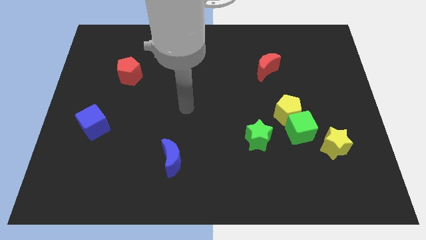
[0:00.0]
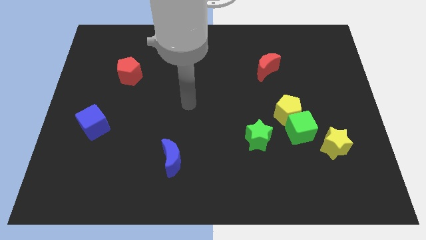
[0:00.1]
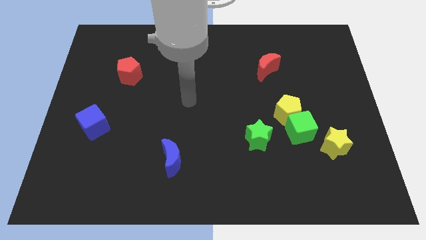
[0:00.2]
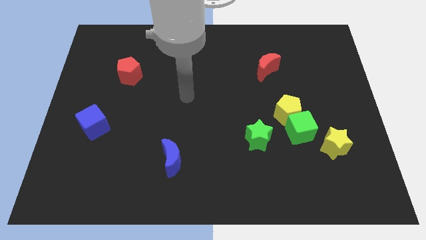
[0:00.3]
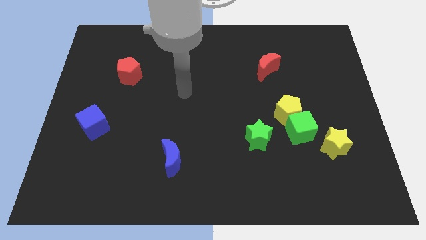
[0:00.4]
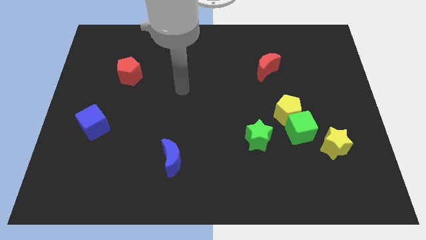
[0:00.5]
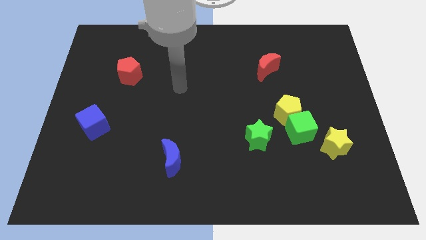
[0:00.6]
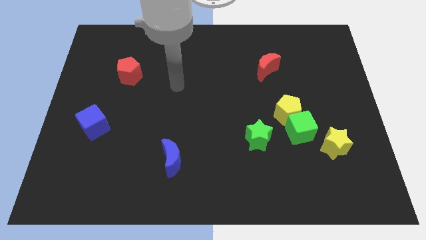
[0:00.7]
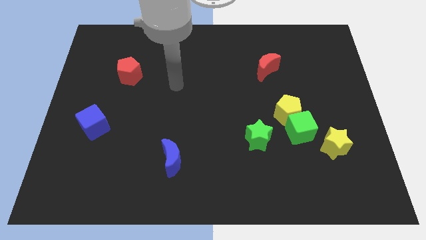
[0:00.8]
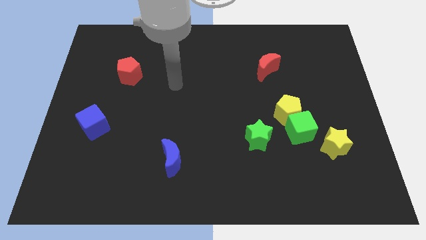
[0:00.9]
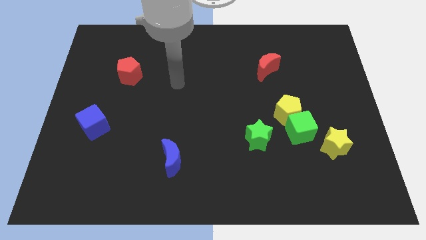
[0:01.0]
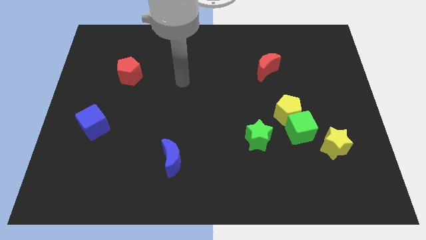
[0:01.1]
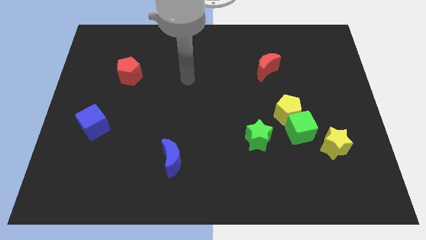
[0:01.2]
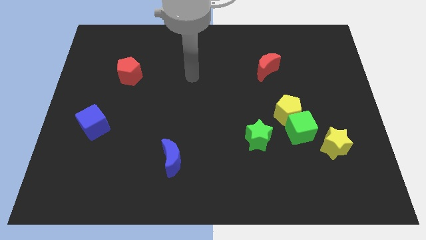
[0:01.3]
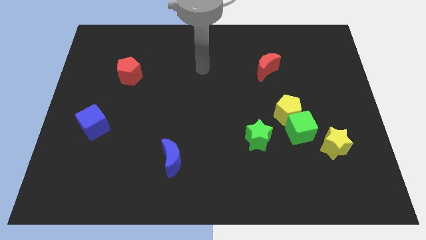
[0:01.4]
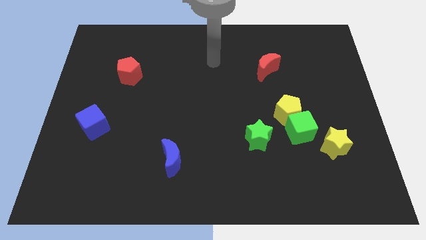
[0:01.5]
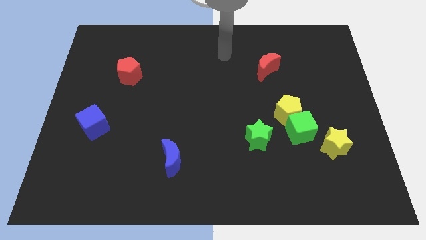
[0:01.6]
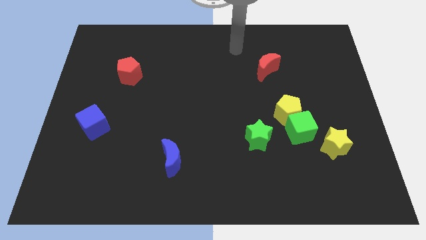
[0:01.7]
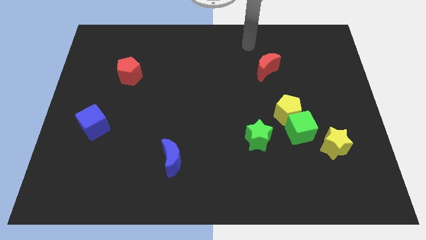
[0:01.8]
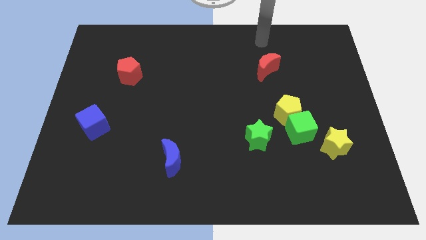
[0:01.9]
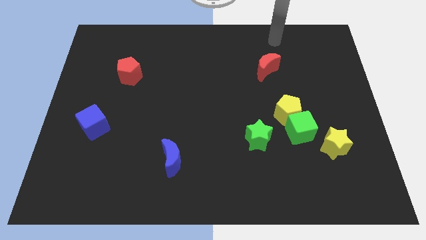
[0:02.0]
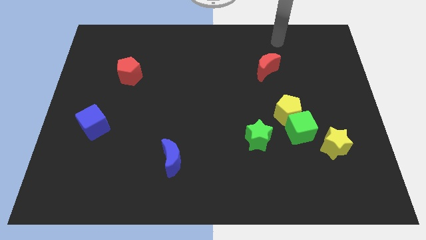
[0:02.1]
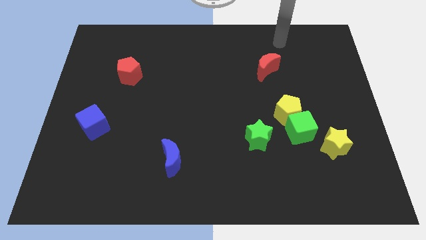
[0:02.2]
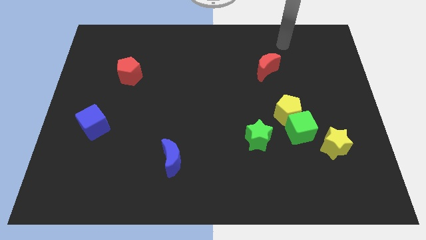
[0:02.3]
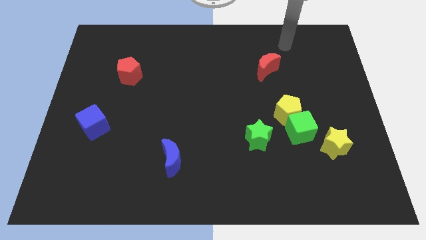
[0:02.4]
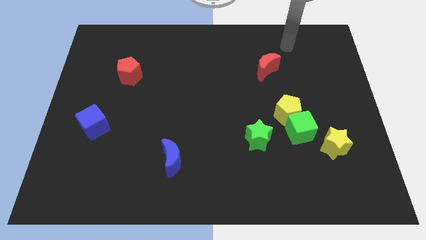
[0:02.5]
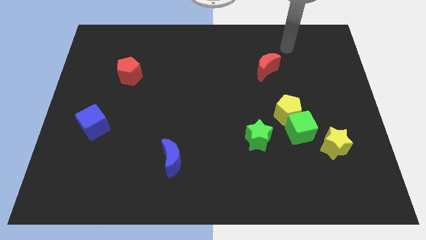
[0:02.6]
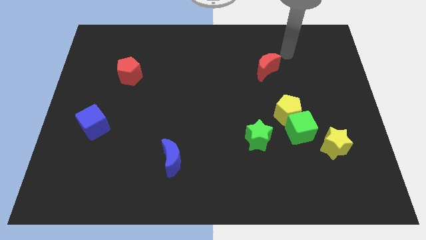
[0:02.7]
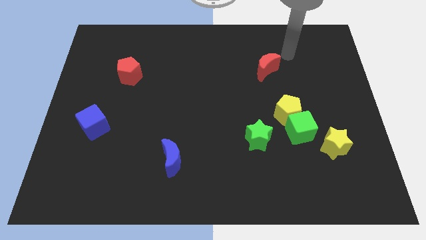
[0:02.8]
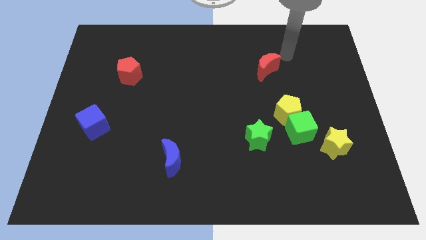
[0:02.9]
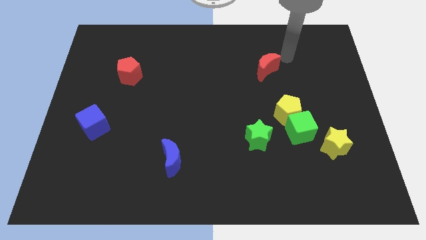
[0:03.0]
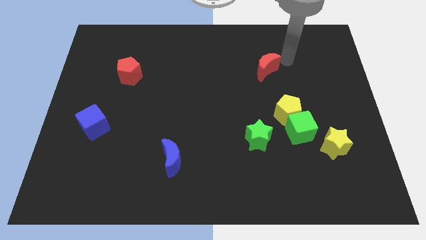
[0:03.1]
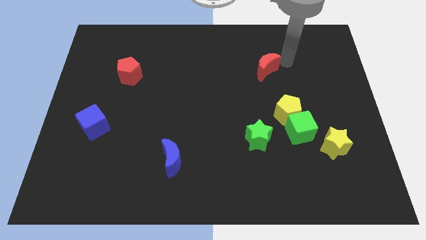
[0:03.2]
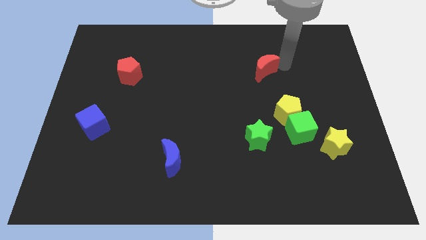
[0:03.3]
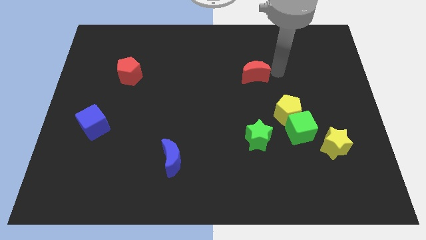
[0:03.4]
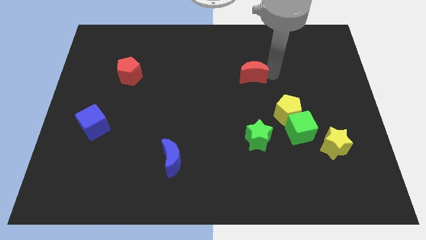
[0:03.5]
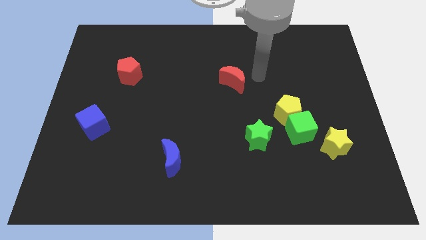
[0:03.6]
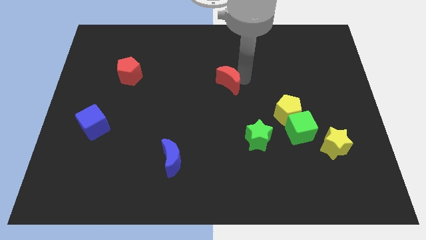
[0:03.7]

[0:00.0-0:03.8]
move red moon to the center

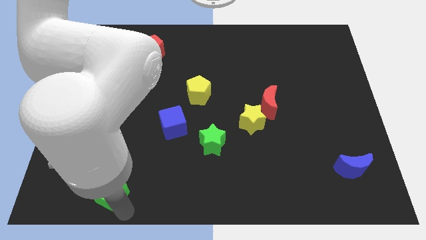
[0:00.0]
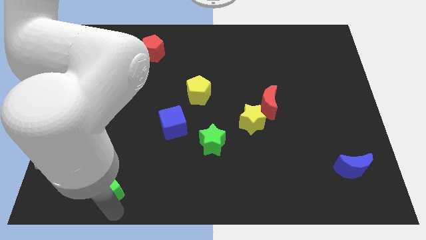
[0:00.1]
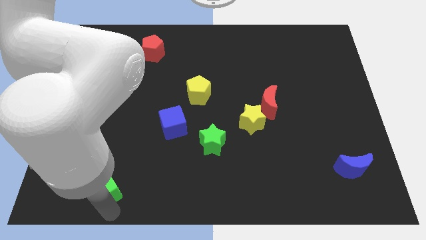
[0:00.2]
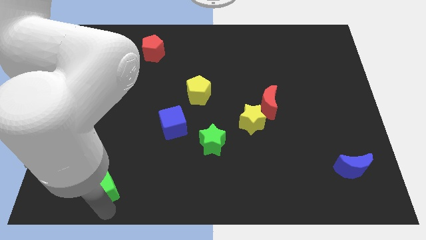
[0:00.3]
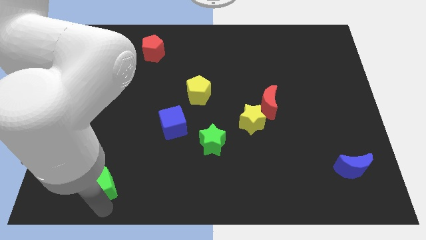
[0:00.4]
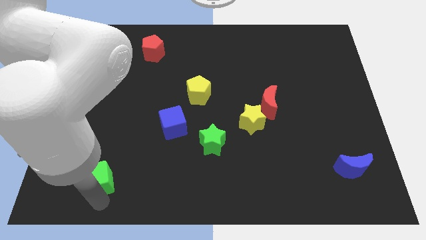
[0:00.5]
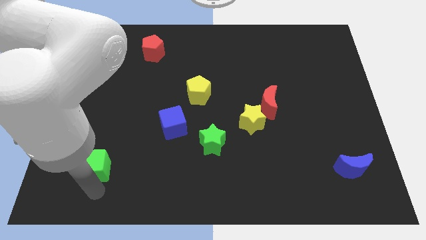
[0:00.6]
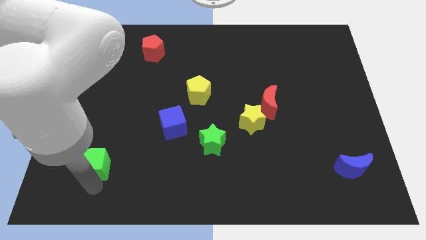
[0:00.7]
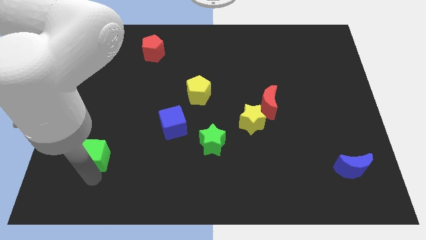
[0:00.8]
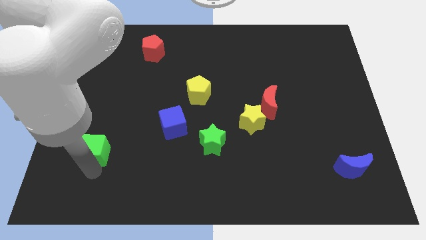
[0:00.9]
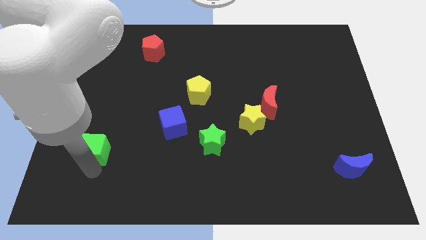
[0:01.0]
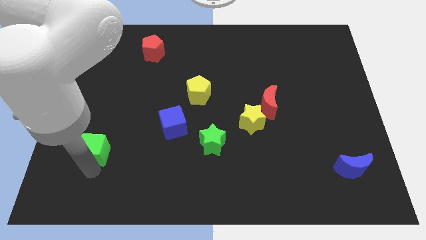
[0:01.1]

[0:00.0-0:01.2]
push the green cube slightly to the top

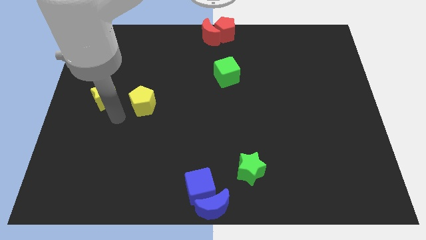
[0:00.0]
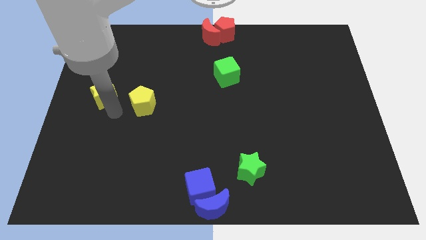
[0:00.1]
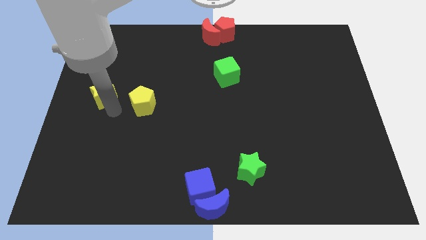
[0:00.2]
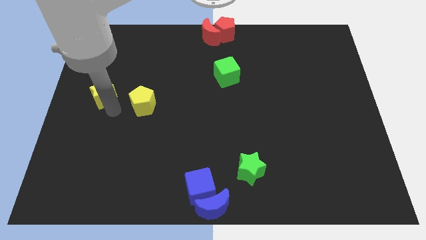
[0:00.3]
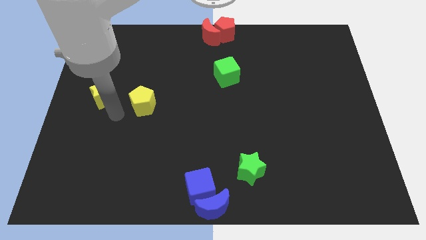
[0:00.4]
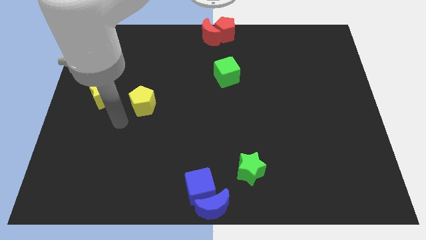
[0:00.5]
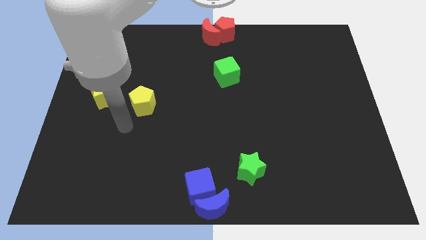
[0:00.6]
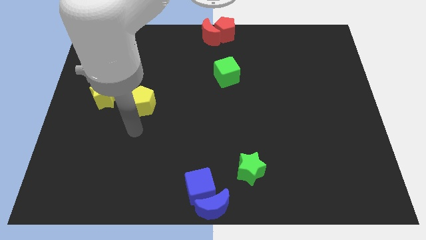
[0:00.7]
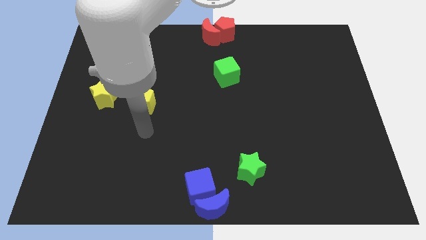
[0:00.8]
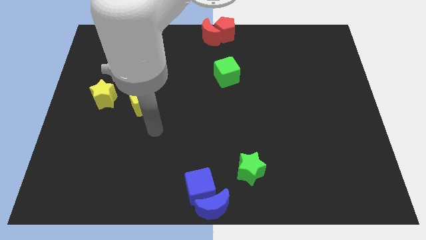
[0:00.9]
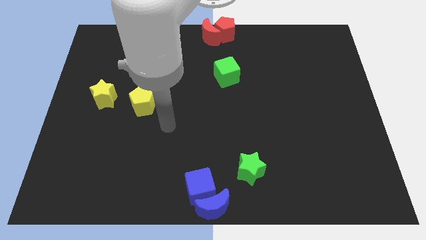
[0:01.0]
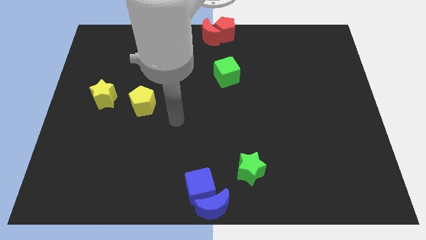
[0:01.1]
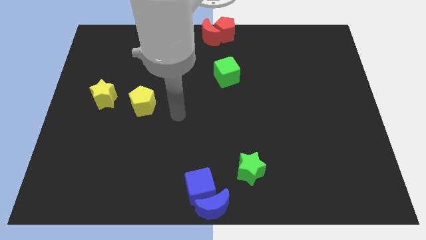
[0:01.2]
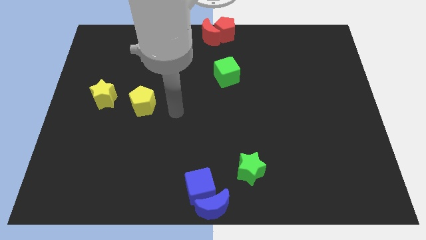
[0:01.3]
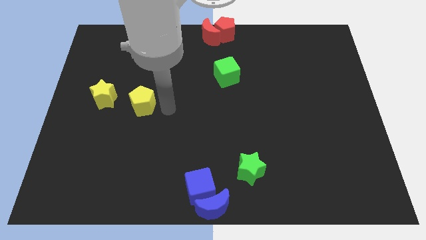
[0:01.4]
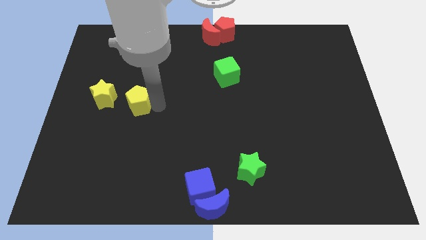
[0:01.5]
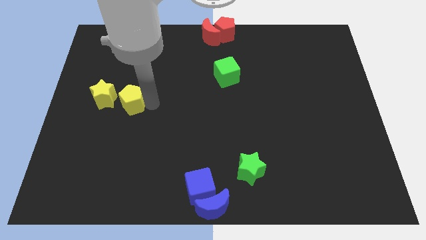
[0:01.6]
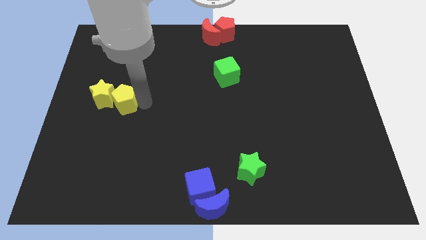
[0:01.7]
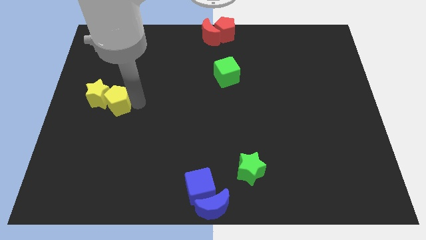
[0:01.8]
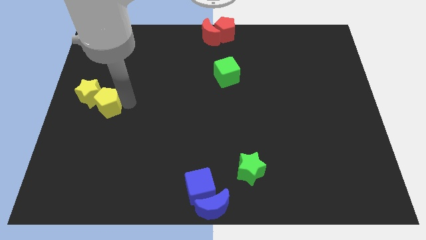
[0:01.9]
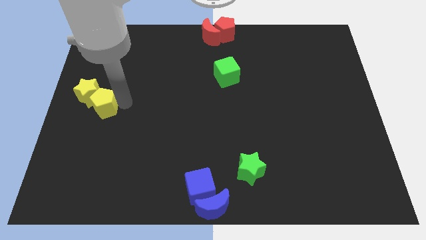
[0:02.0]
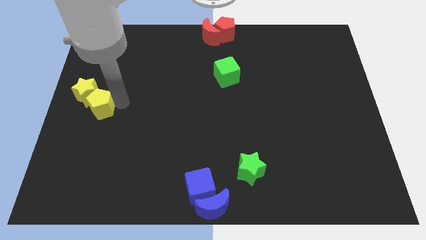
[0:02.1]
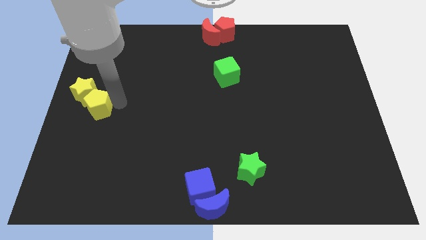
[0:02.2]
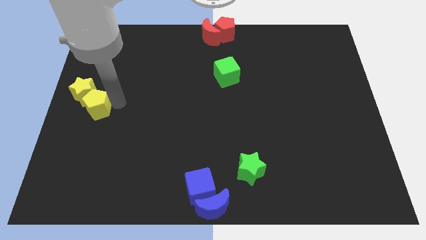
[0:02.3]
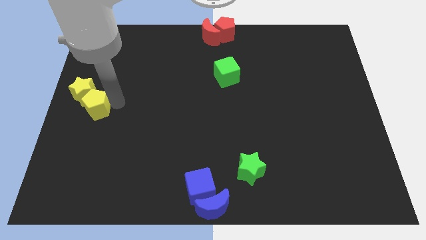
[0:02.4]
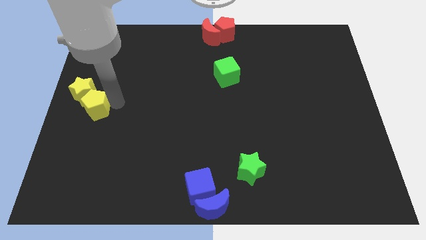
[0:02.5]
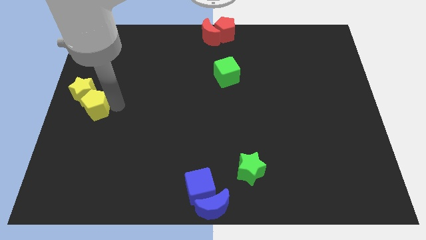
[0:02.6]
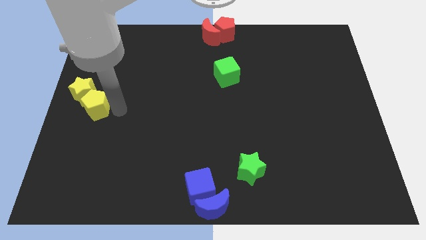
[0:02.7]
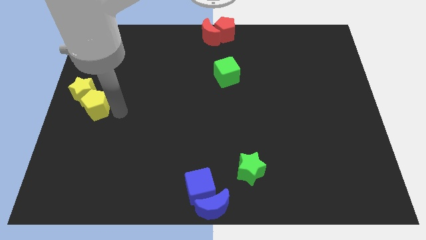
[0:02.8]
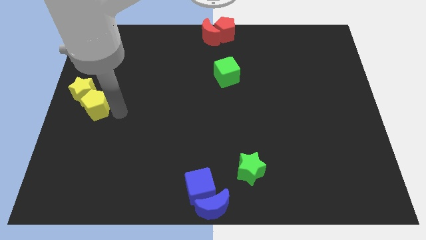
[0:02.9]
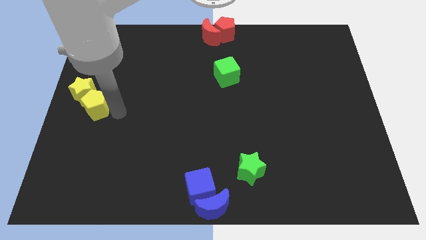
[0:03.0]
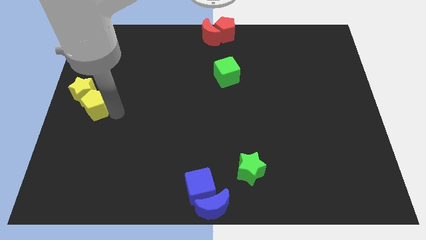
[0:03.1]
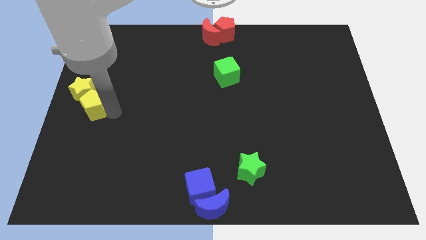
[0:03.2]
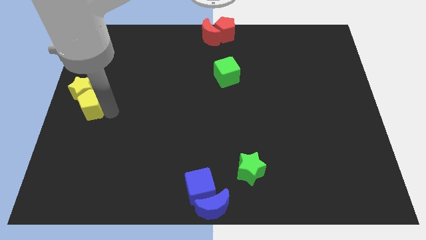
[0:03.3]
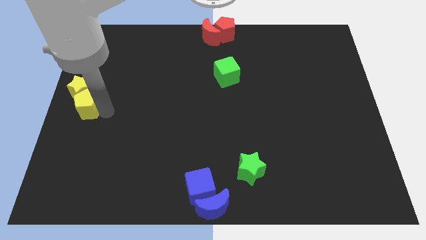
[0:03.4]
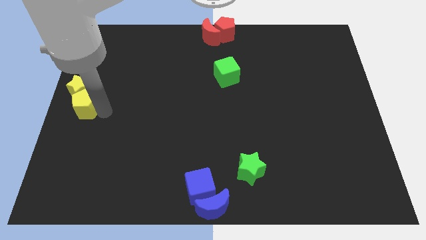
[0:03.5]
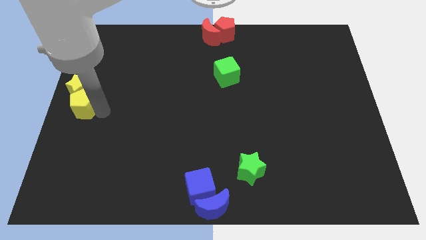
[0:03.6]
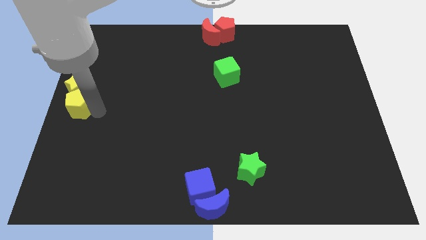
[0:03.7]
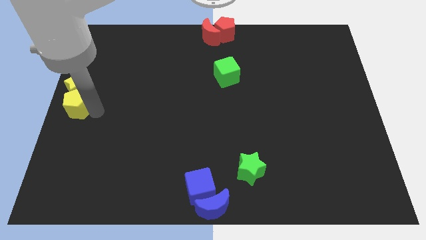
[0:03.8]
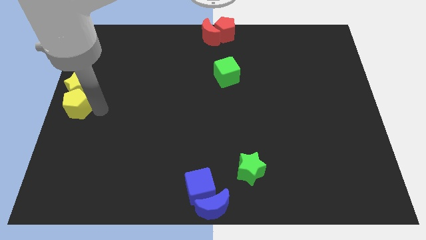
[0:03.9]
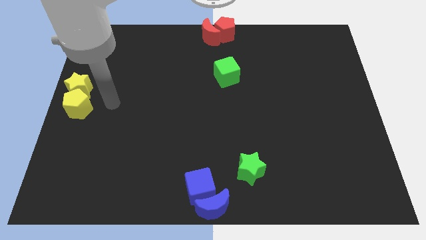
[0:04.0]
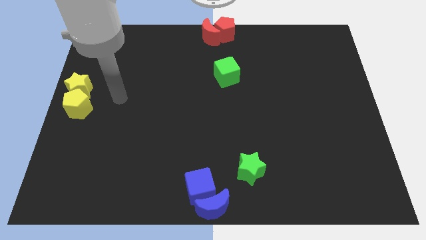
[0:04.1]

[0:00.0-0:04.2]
adjust the yellow pentagon and yellow star at the center left of the board

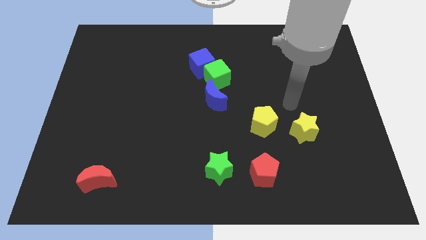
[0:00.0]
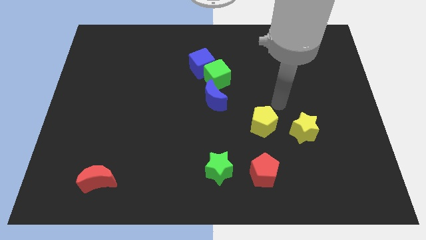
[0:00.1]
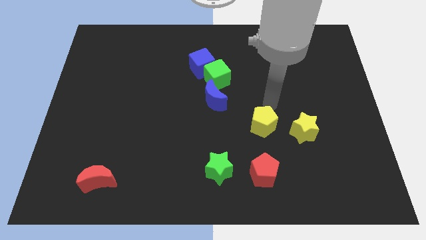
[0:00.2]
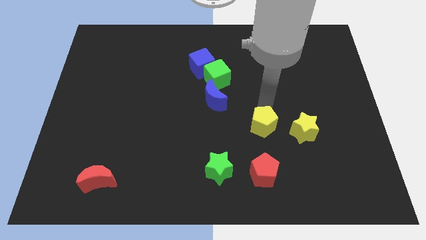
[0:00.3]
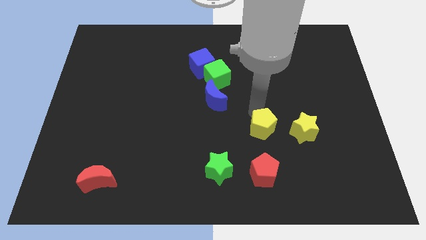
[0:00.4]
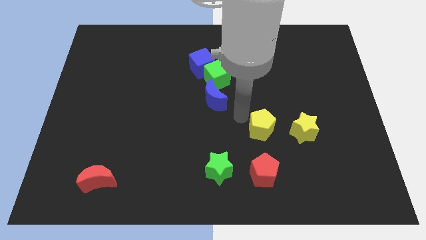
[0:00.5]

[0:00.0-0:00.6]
move slightly the yellow pentagon
